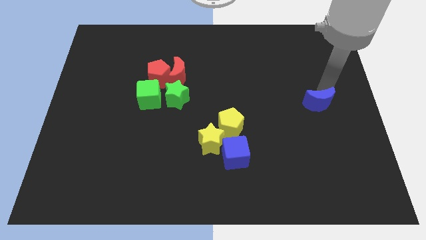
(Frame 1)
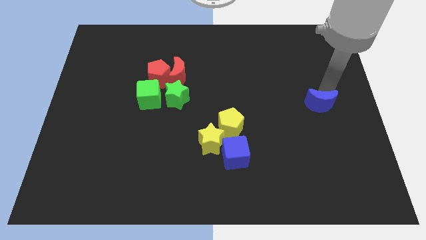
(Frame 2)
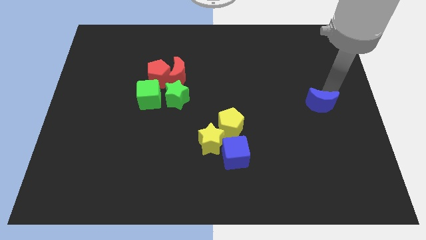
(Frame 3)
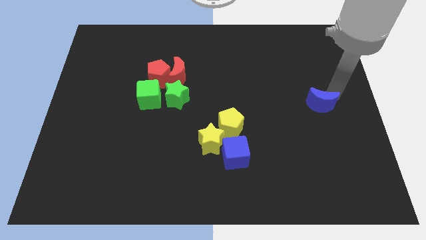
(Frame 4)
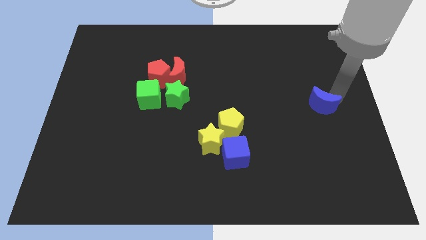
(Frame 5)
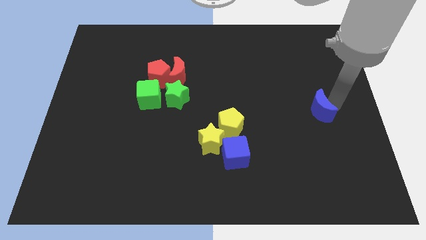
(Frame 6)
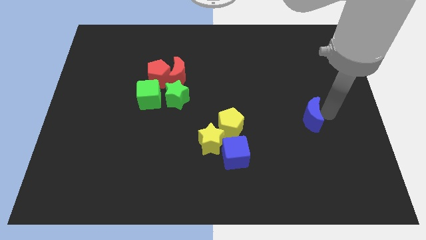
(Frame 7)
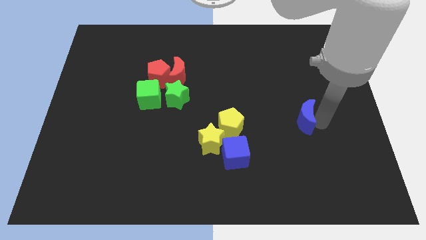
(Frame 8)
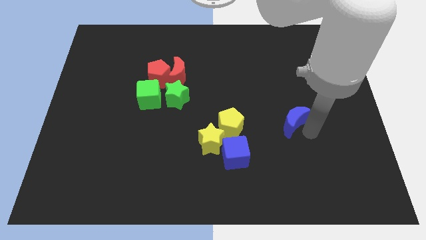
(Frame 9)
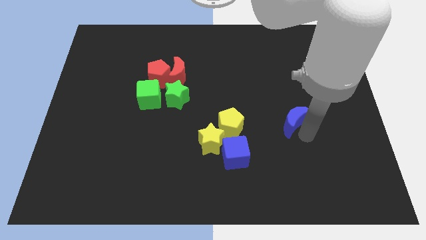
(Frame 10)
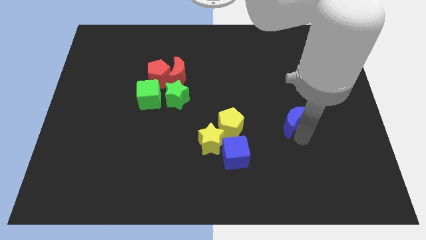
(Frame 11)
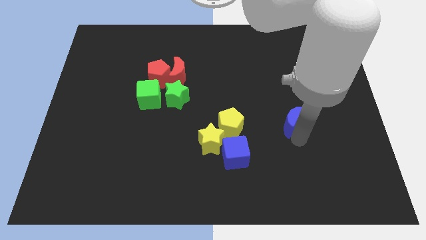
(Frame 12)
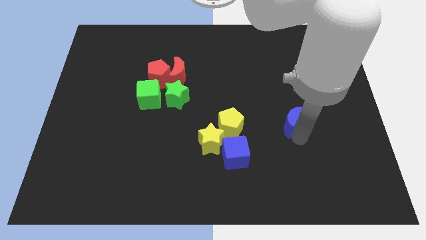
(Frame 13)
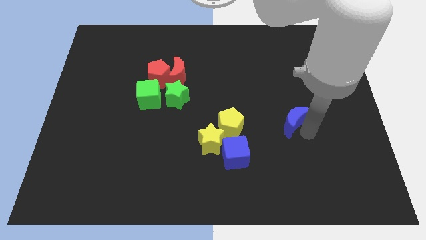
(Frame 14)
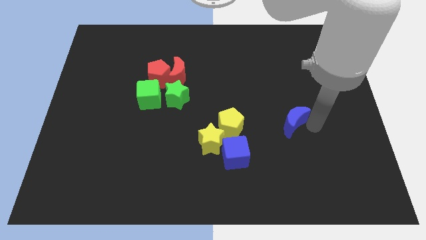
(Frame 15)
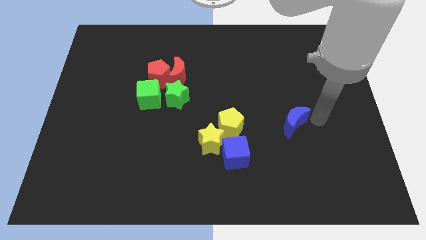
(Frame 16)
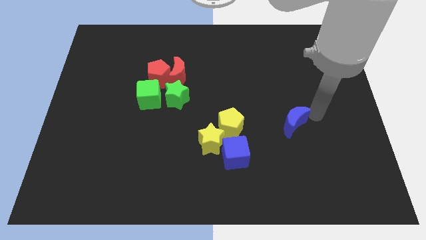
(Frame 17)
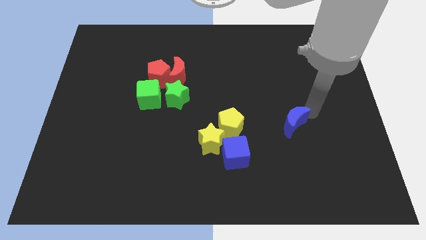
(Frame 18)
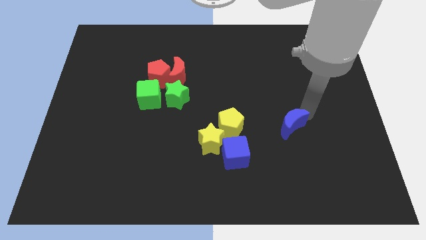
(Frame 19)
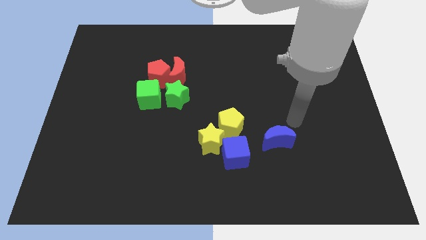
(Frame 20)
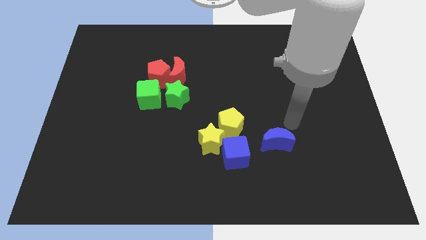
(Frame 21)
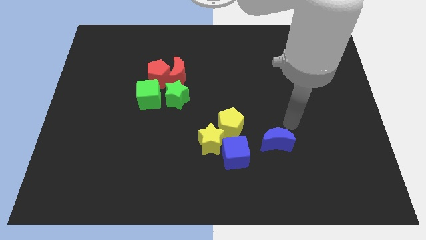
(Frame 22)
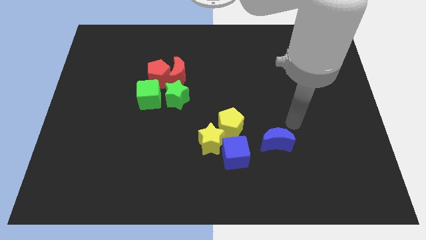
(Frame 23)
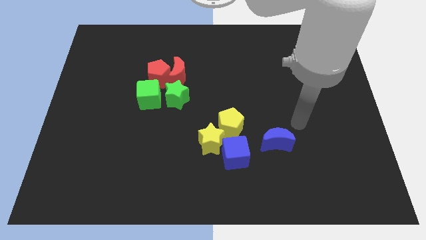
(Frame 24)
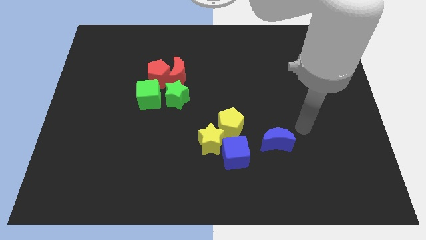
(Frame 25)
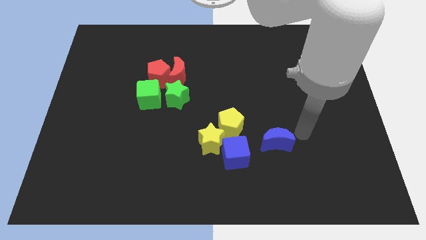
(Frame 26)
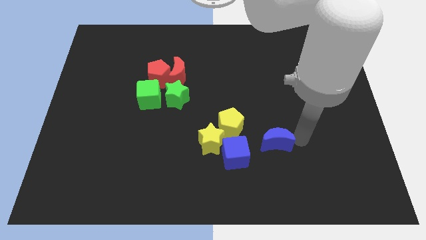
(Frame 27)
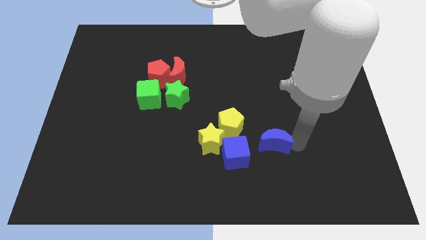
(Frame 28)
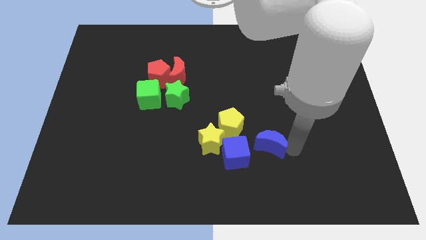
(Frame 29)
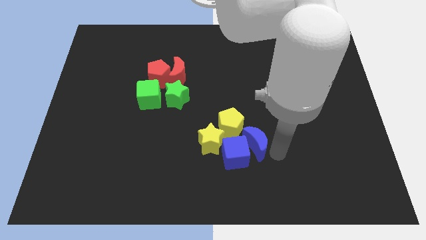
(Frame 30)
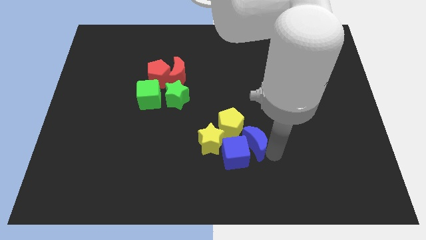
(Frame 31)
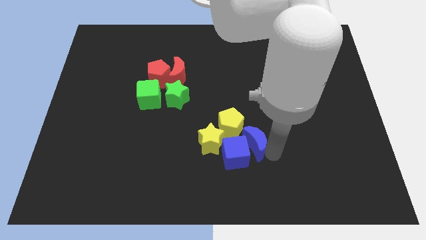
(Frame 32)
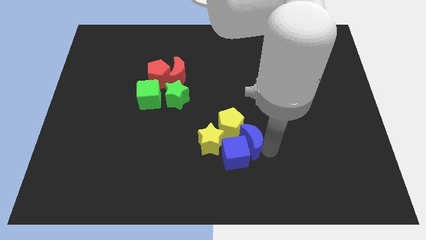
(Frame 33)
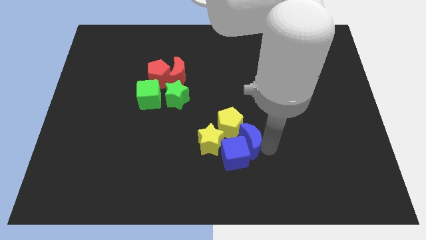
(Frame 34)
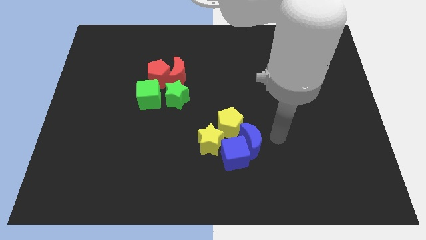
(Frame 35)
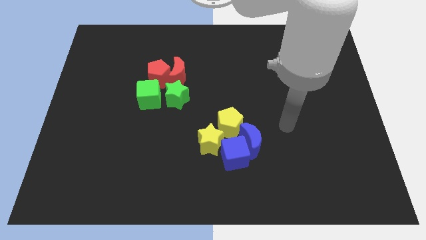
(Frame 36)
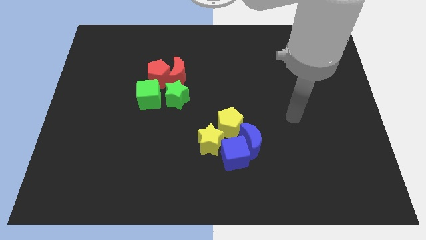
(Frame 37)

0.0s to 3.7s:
move the blue crescent to the right of the blue cube

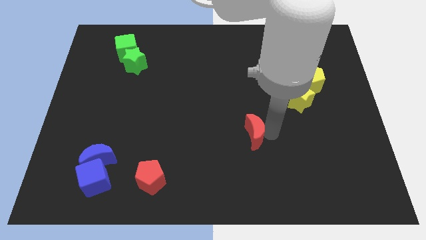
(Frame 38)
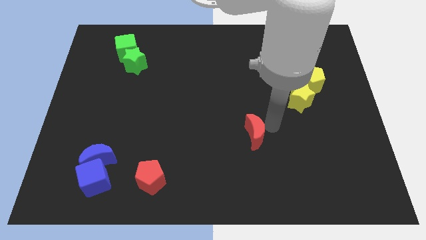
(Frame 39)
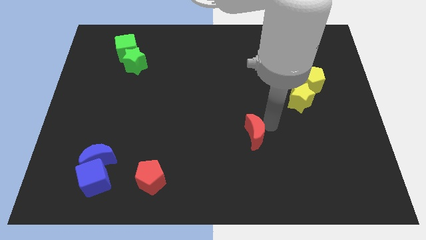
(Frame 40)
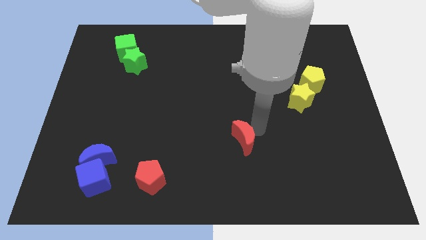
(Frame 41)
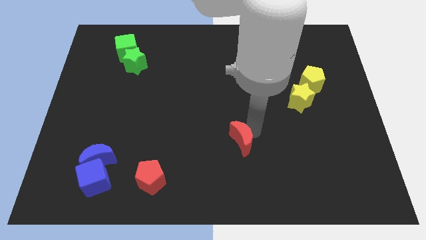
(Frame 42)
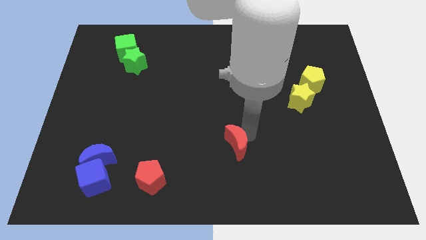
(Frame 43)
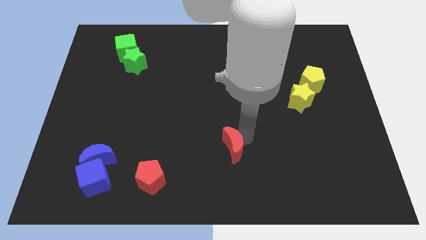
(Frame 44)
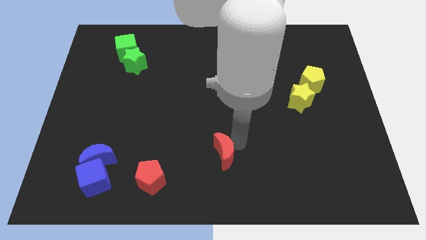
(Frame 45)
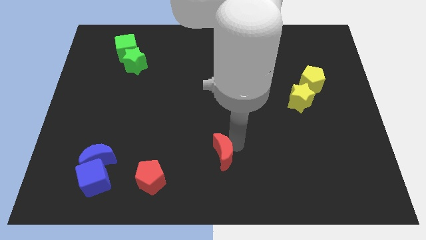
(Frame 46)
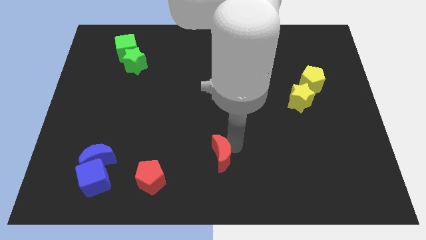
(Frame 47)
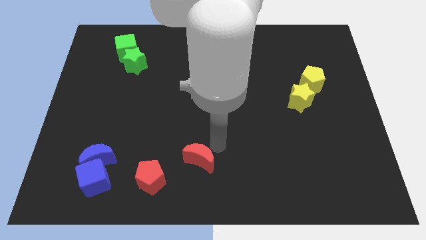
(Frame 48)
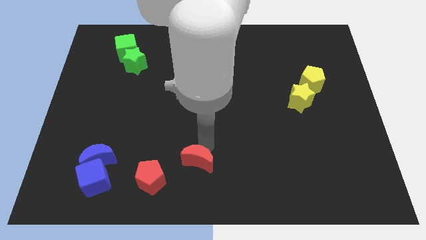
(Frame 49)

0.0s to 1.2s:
move the red moon close to the red pentagon

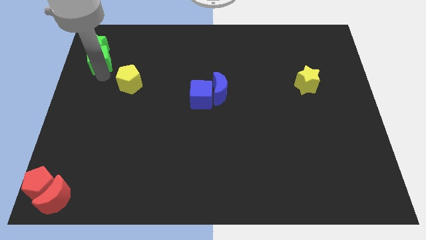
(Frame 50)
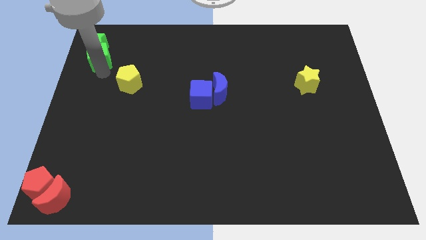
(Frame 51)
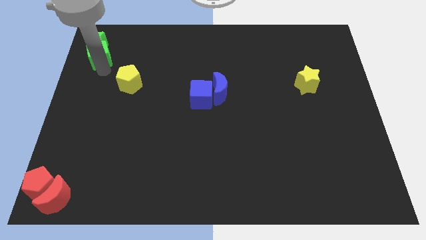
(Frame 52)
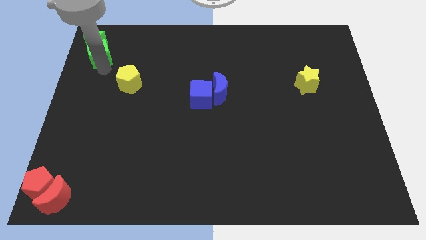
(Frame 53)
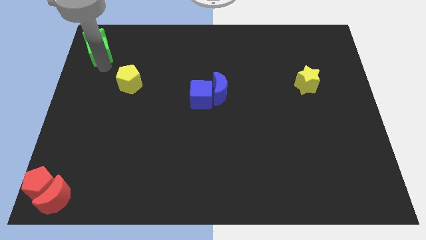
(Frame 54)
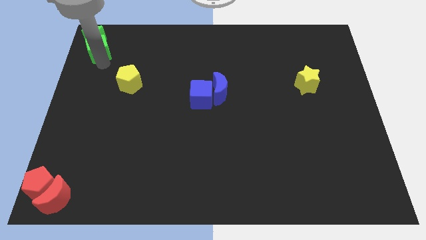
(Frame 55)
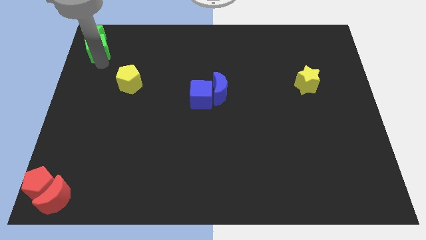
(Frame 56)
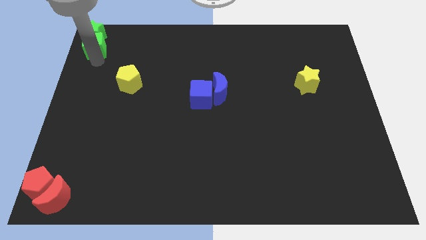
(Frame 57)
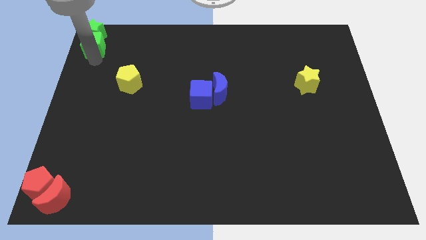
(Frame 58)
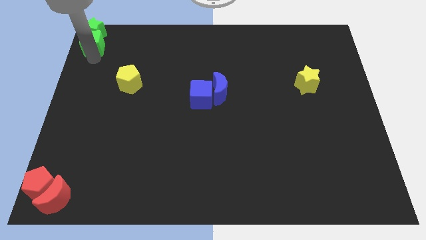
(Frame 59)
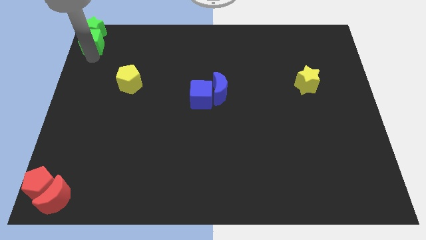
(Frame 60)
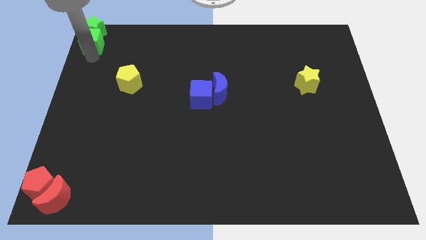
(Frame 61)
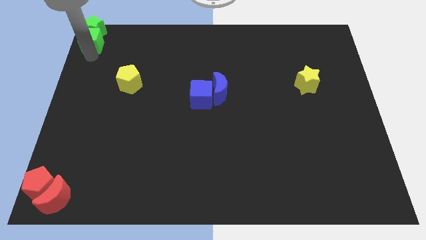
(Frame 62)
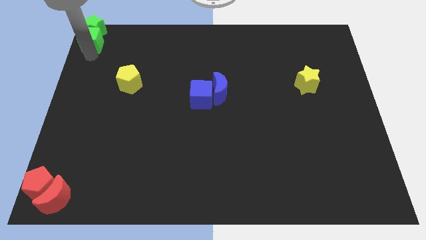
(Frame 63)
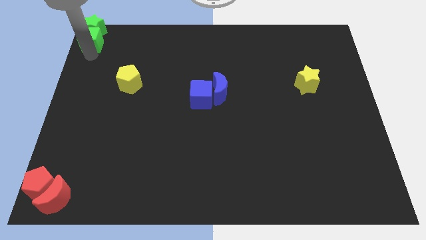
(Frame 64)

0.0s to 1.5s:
push the green cube along with green star to the top left corner of the board

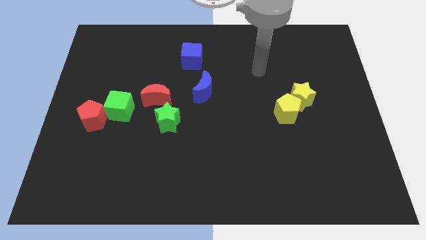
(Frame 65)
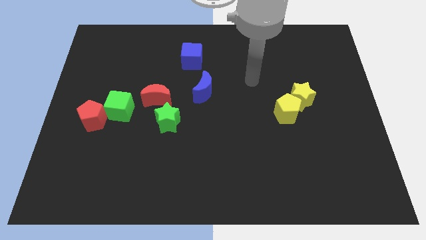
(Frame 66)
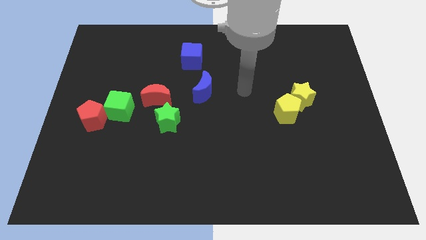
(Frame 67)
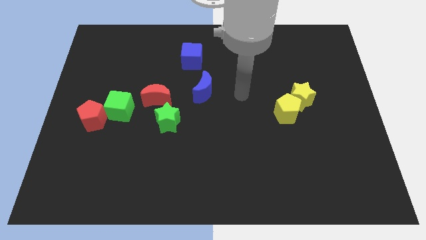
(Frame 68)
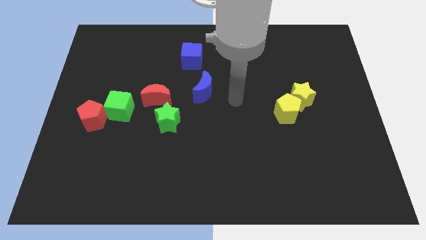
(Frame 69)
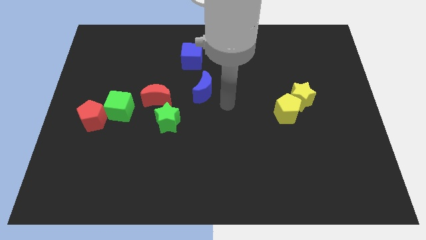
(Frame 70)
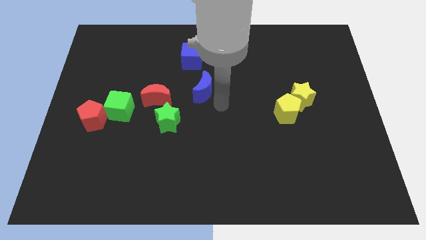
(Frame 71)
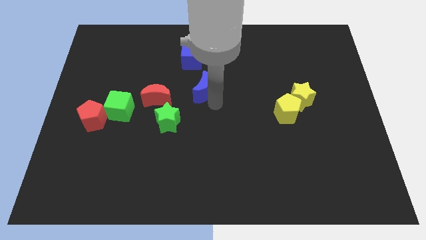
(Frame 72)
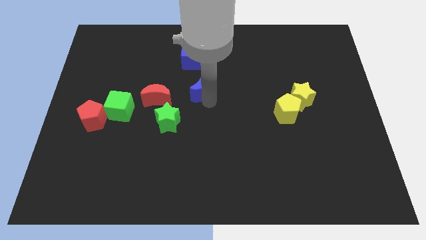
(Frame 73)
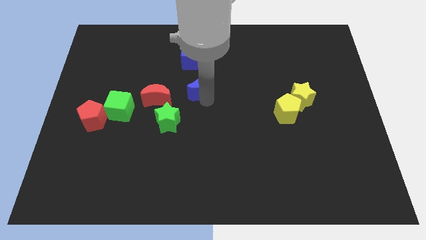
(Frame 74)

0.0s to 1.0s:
touch the bottom of blue moon

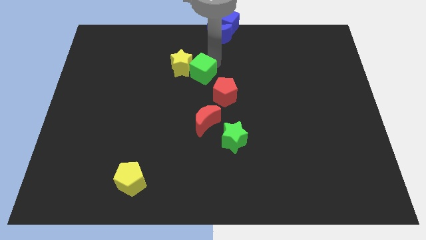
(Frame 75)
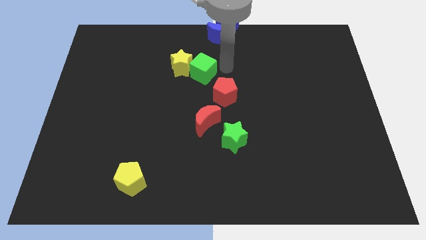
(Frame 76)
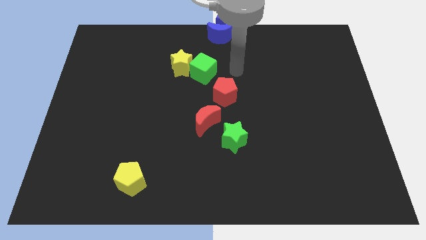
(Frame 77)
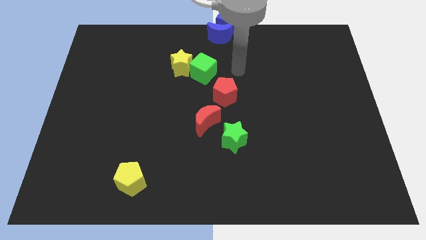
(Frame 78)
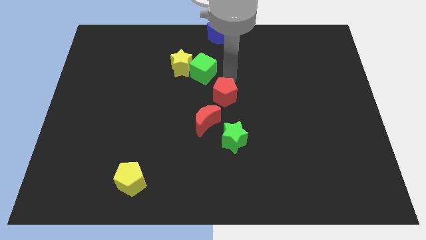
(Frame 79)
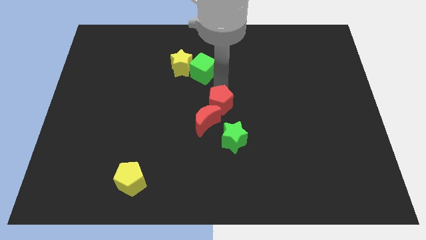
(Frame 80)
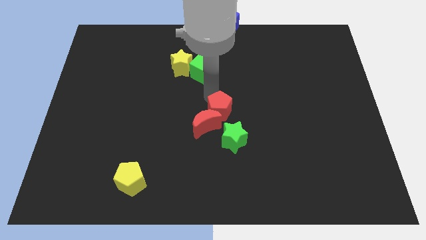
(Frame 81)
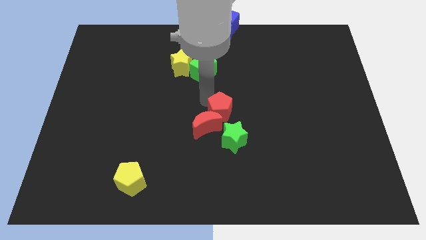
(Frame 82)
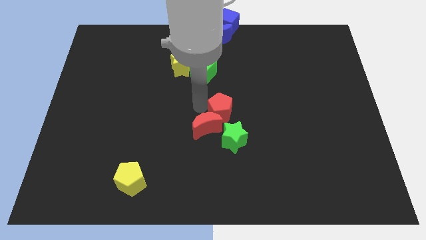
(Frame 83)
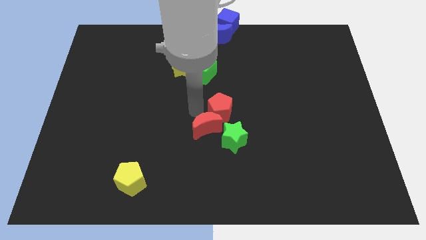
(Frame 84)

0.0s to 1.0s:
push the red pentagon into the red moon

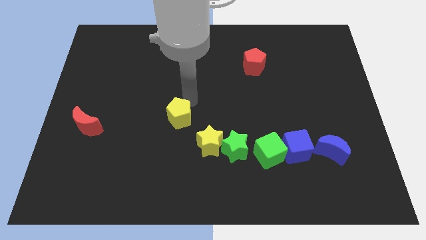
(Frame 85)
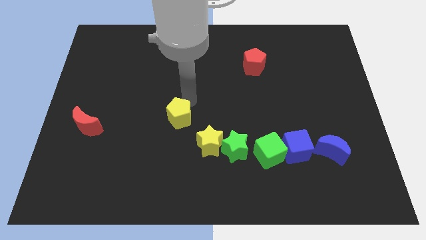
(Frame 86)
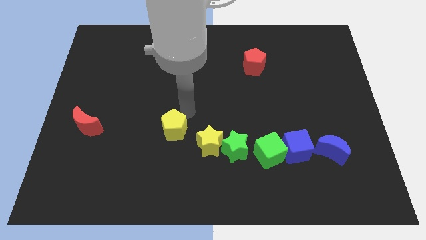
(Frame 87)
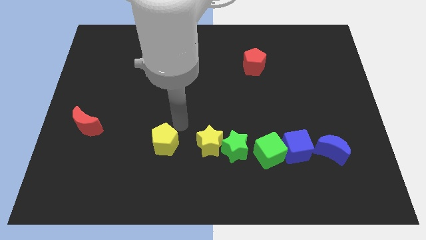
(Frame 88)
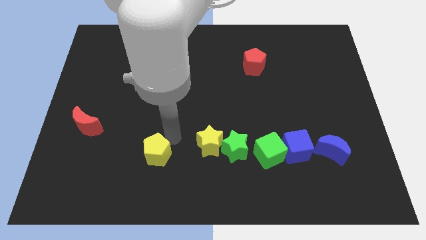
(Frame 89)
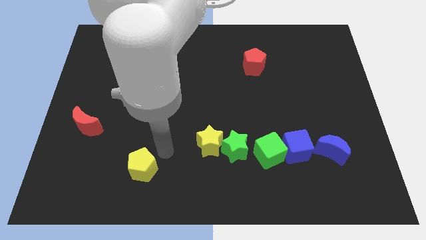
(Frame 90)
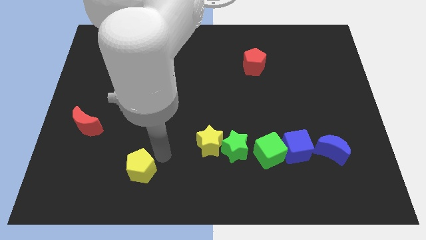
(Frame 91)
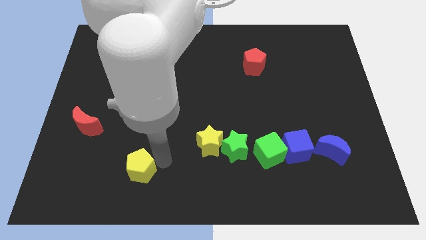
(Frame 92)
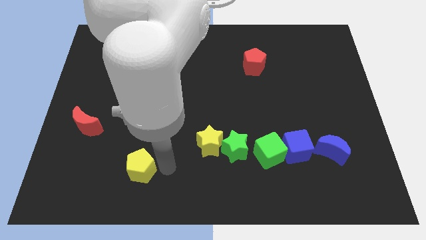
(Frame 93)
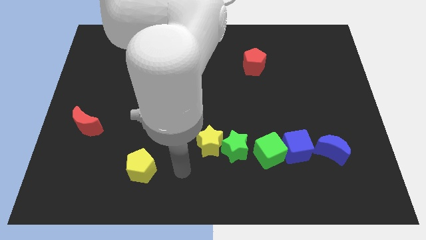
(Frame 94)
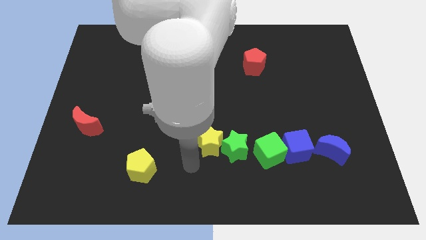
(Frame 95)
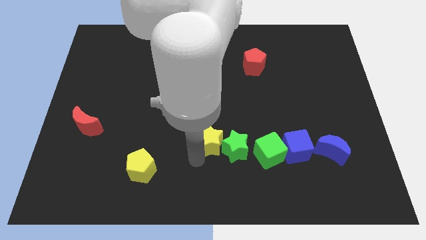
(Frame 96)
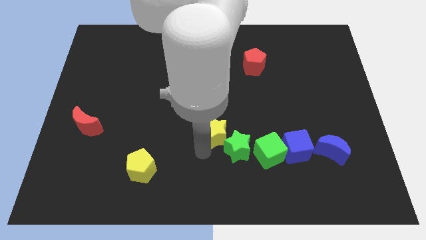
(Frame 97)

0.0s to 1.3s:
push the yellow pentagon towards down a bit
